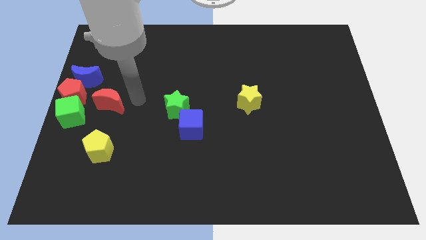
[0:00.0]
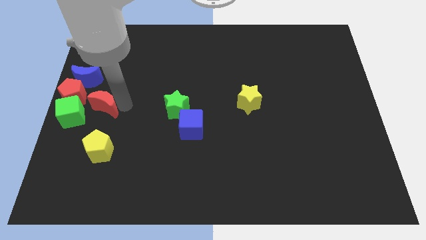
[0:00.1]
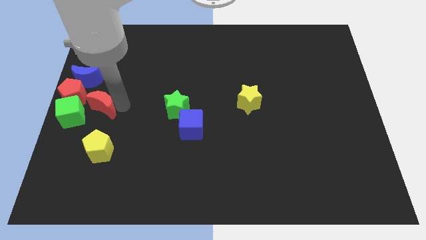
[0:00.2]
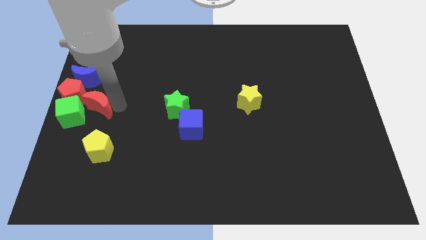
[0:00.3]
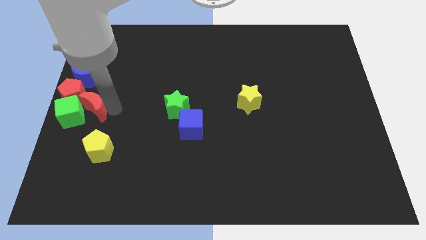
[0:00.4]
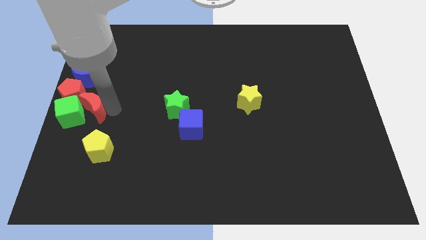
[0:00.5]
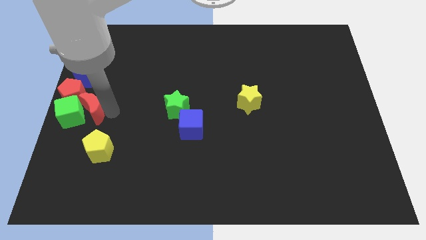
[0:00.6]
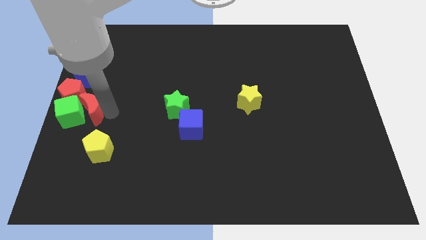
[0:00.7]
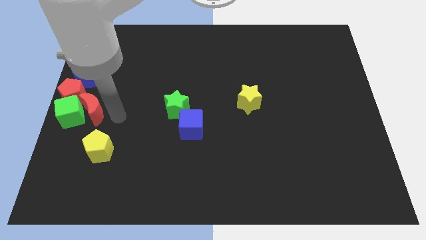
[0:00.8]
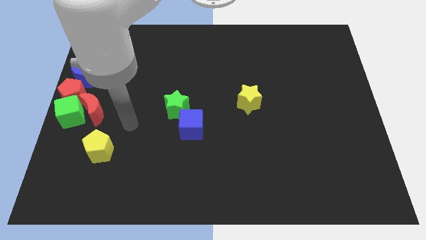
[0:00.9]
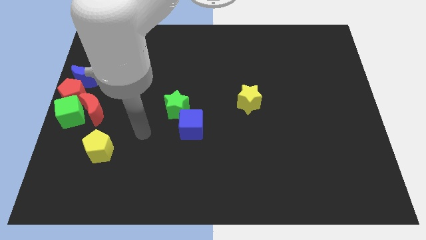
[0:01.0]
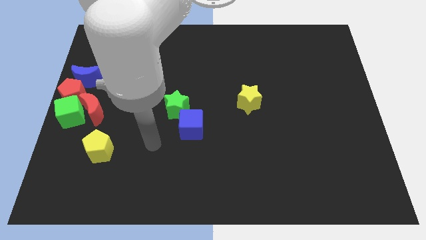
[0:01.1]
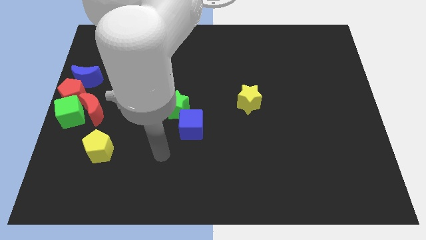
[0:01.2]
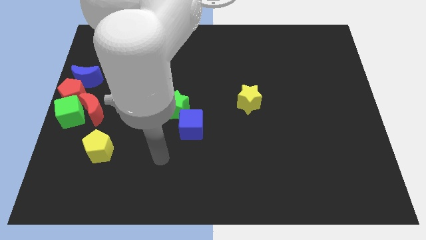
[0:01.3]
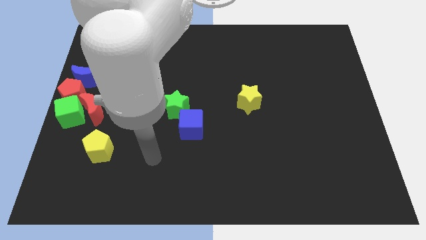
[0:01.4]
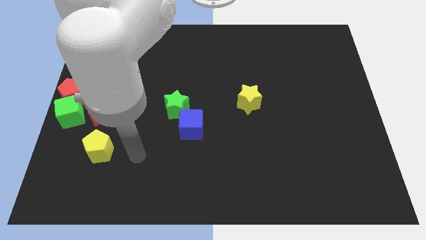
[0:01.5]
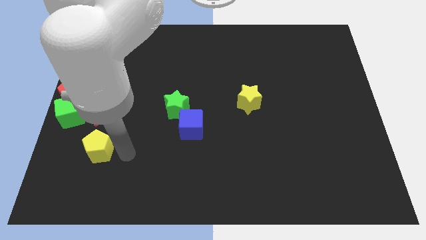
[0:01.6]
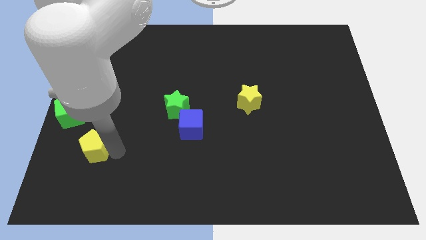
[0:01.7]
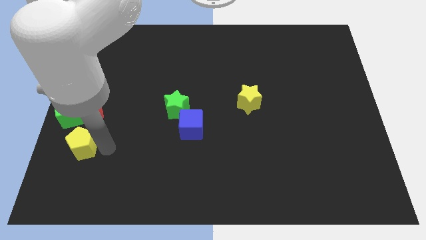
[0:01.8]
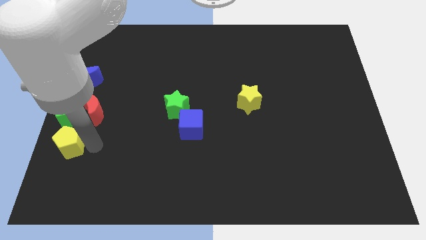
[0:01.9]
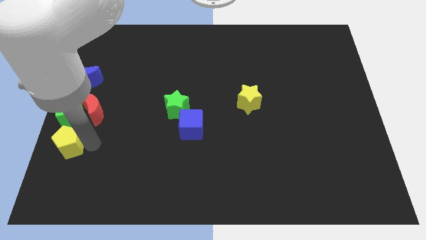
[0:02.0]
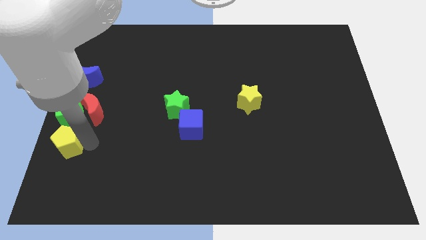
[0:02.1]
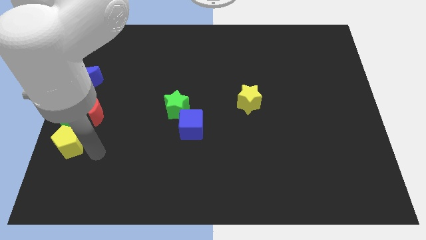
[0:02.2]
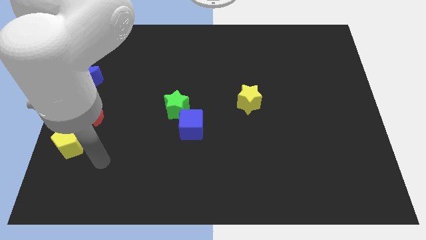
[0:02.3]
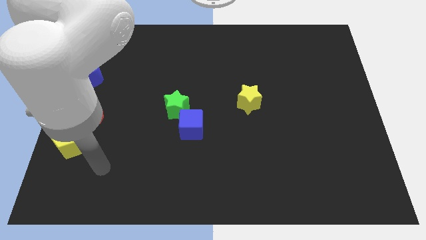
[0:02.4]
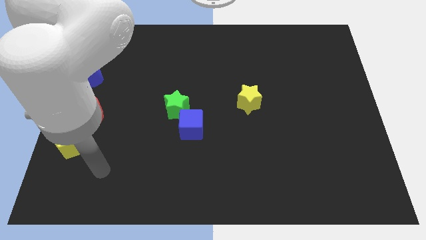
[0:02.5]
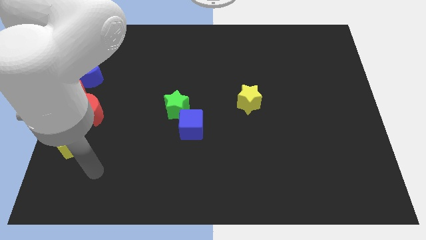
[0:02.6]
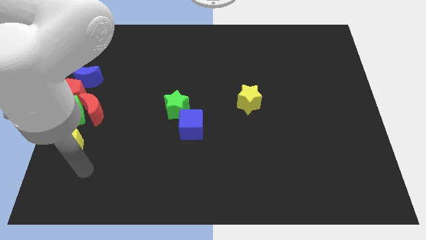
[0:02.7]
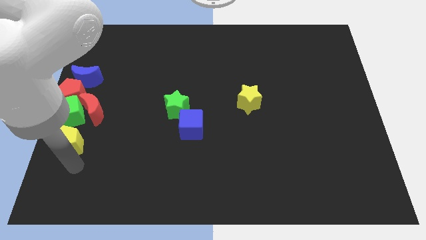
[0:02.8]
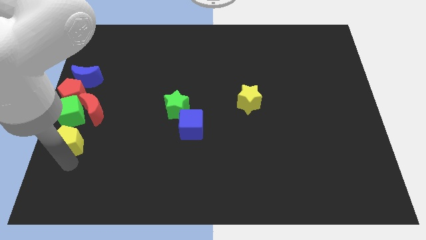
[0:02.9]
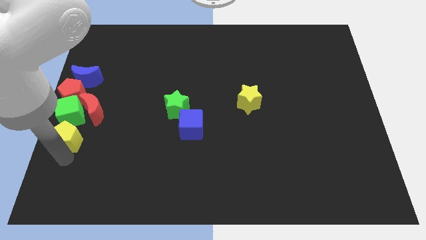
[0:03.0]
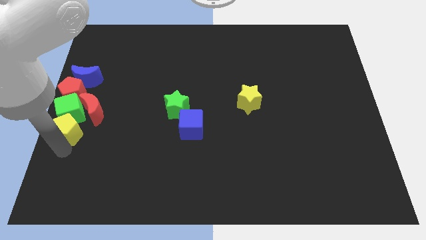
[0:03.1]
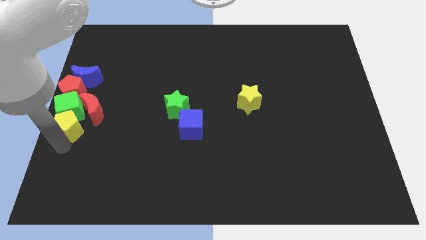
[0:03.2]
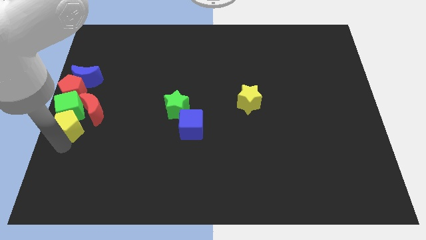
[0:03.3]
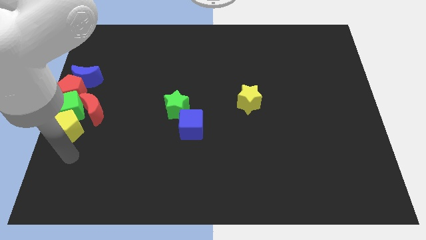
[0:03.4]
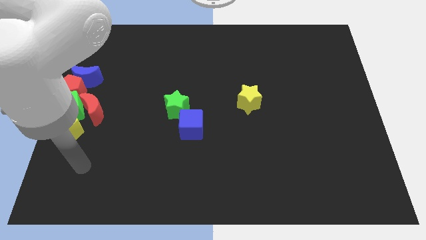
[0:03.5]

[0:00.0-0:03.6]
add the red moon and yellow pentagon to the group of blocks at the center left side of the board

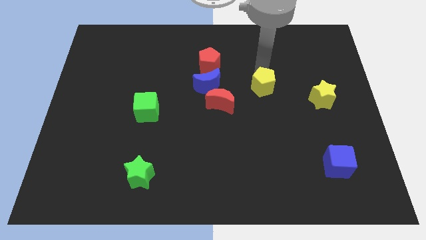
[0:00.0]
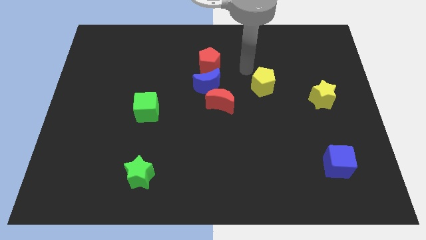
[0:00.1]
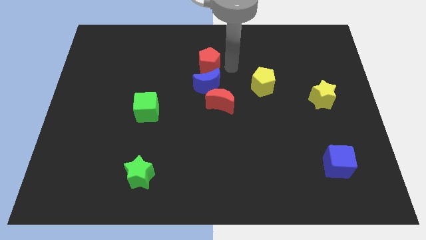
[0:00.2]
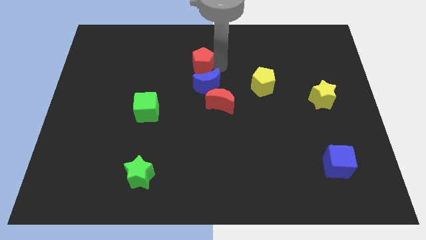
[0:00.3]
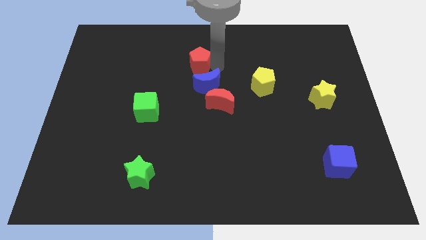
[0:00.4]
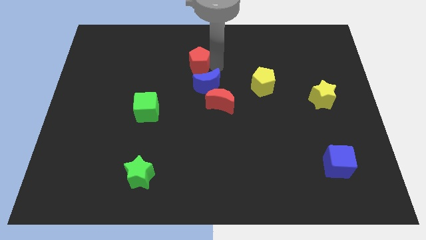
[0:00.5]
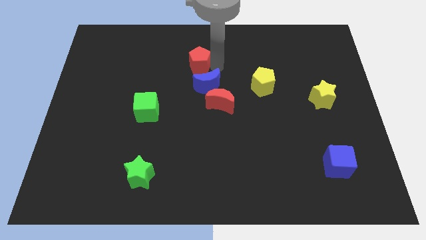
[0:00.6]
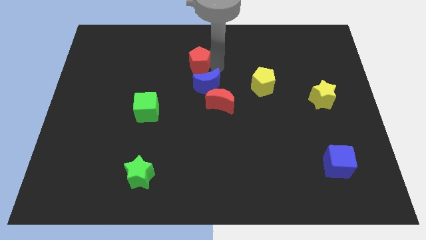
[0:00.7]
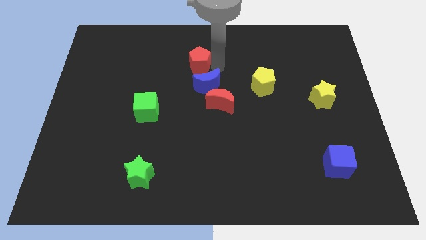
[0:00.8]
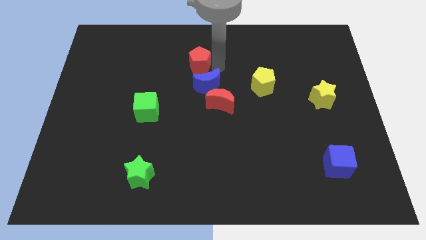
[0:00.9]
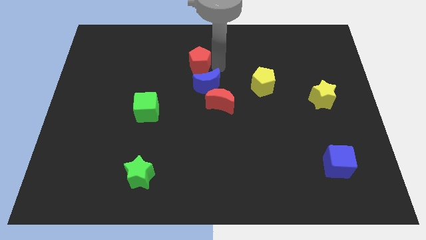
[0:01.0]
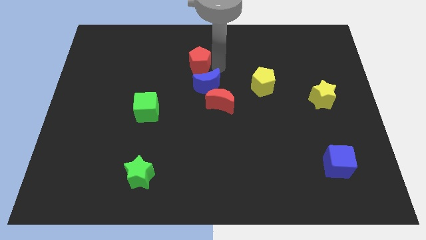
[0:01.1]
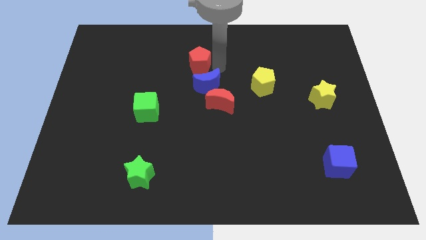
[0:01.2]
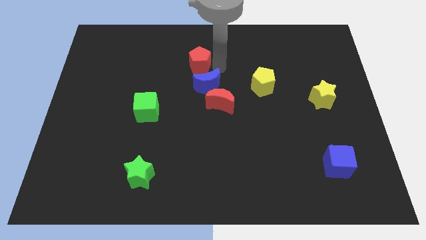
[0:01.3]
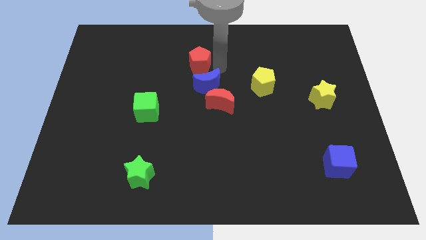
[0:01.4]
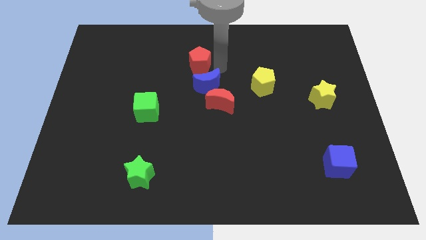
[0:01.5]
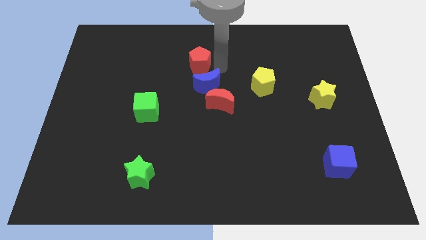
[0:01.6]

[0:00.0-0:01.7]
slightly push the red pentagon towards the left side of the board

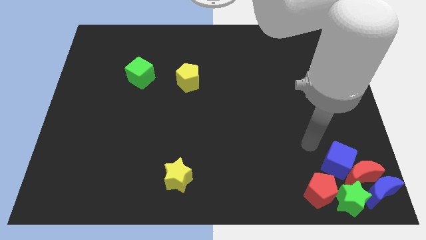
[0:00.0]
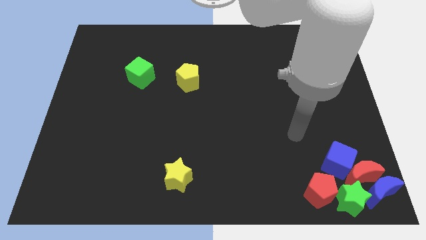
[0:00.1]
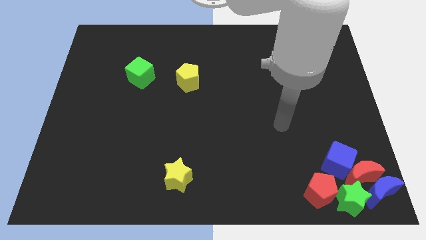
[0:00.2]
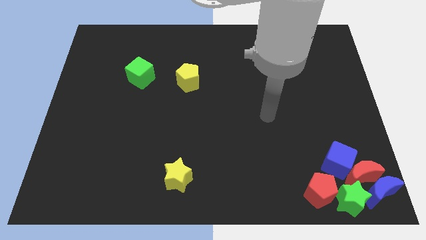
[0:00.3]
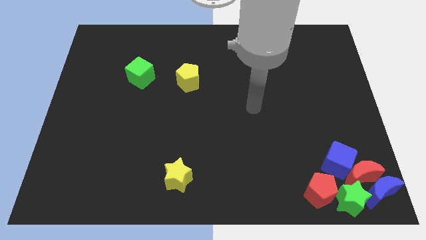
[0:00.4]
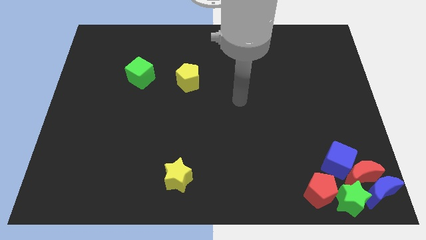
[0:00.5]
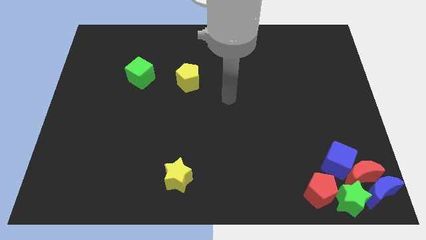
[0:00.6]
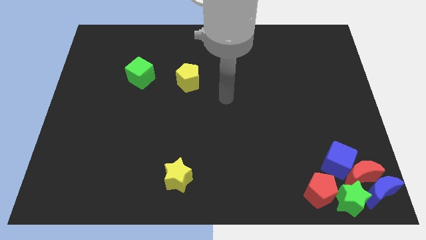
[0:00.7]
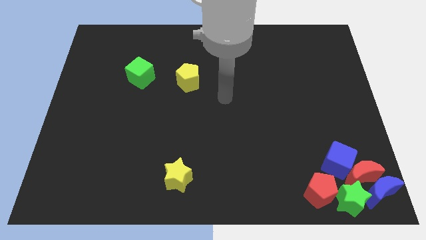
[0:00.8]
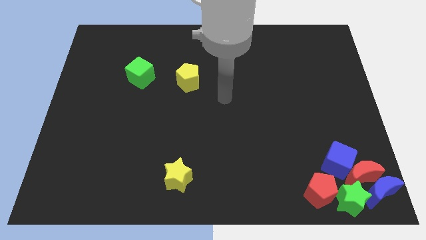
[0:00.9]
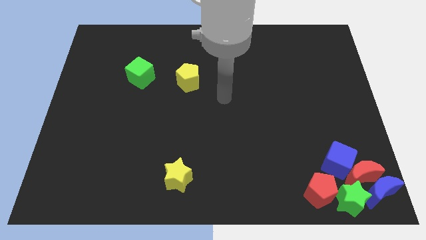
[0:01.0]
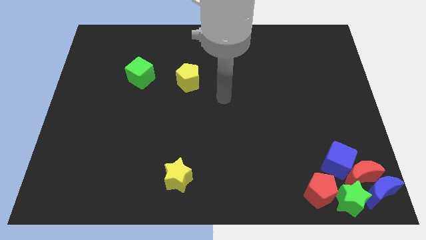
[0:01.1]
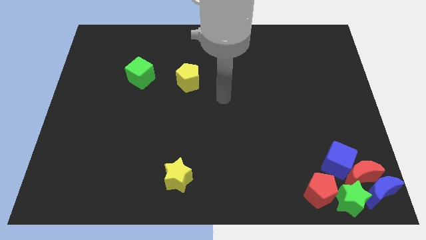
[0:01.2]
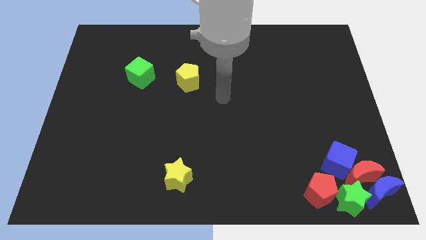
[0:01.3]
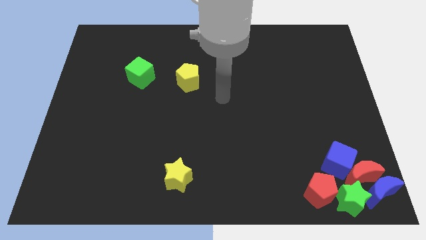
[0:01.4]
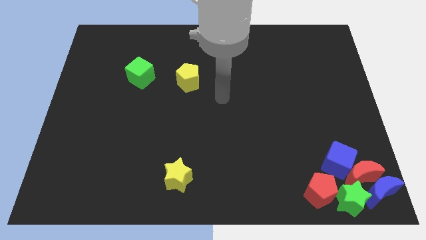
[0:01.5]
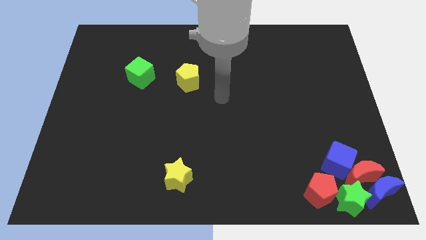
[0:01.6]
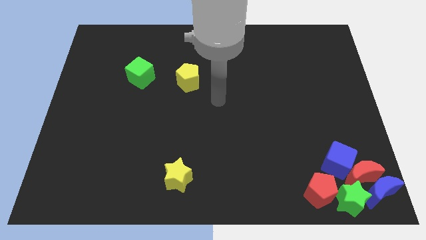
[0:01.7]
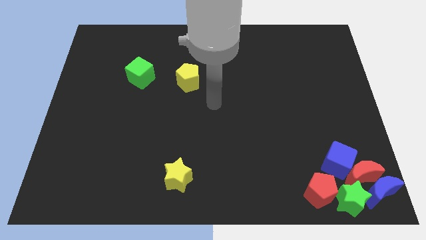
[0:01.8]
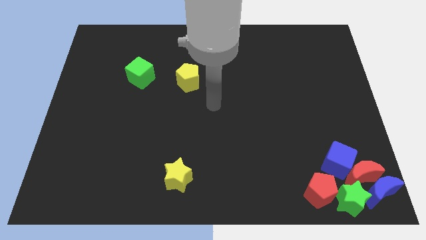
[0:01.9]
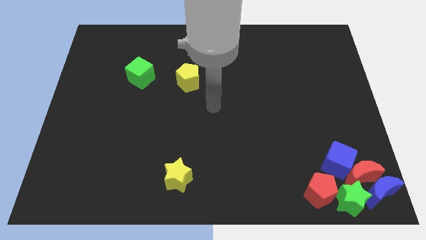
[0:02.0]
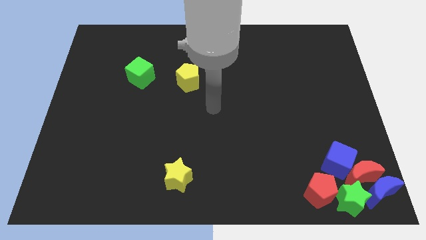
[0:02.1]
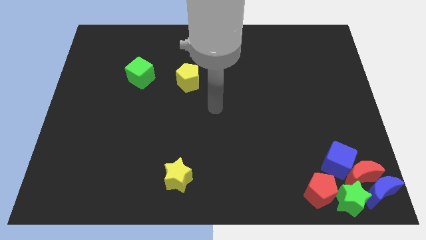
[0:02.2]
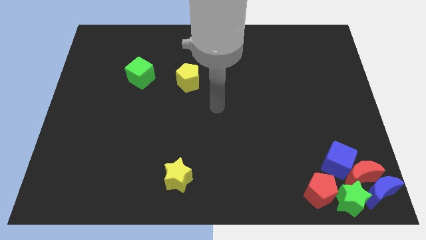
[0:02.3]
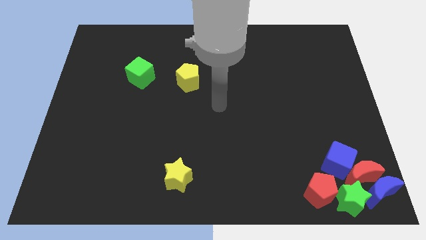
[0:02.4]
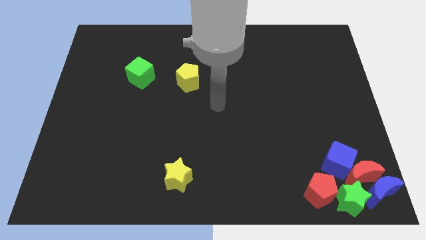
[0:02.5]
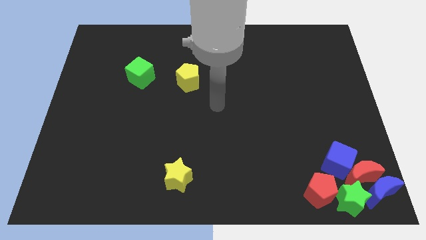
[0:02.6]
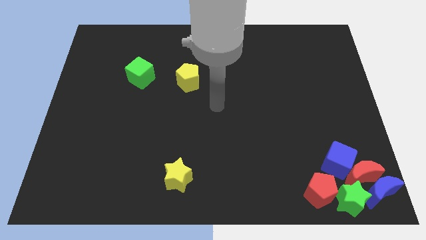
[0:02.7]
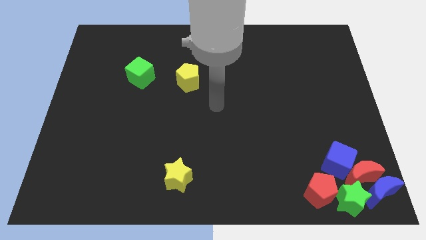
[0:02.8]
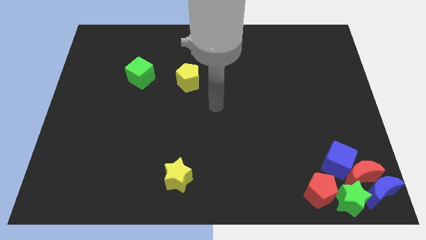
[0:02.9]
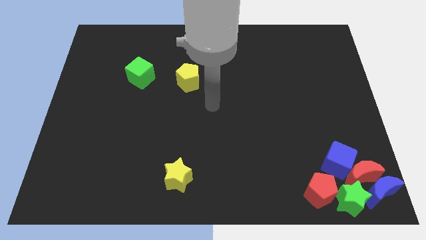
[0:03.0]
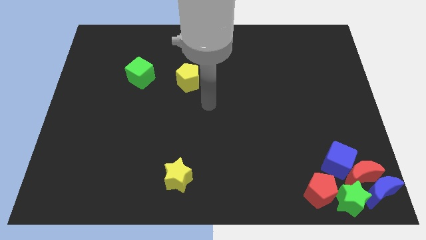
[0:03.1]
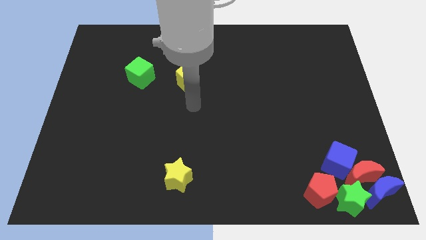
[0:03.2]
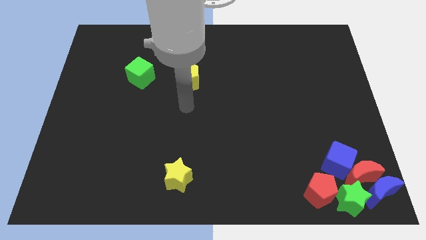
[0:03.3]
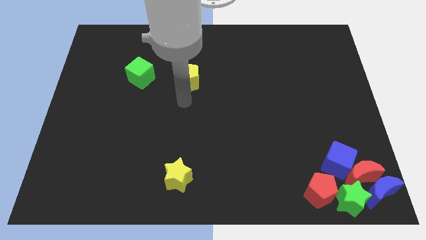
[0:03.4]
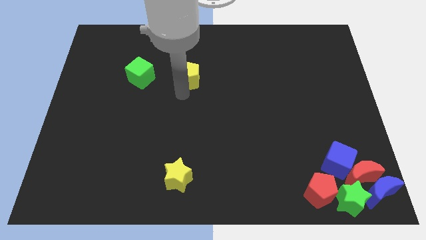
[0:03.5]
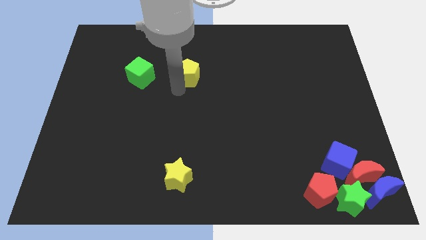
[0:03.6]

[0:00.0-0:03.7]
move the yellow pentagon to the right side of the green cube
